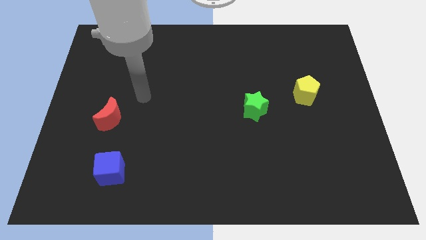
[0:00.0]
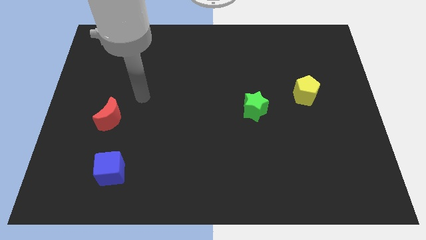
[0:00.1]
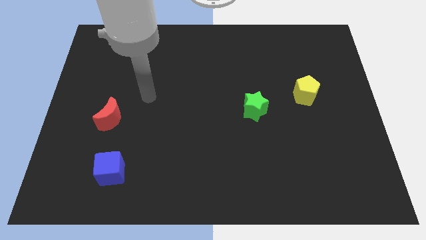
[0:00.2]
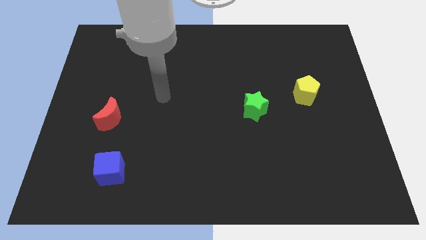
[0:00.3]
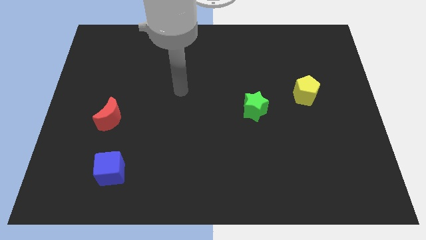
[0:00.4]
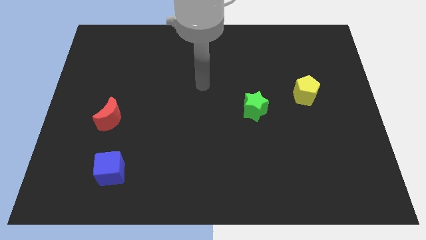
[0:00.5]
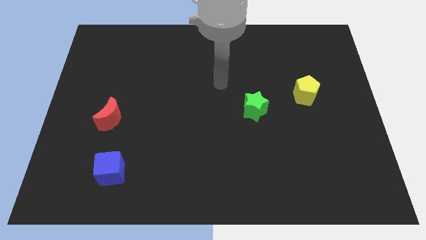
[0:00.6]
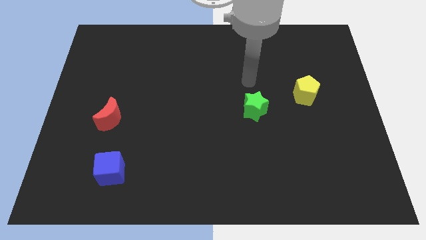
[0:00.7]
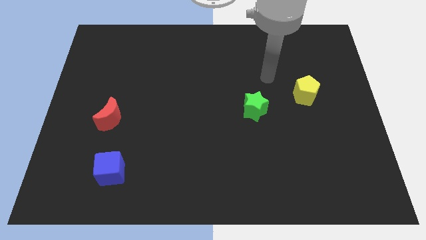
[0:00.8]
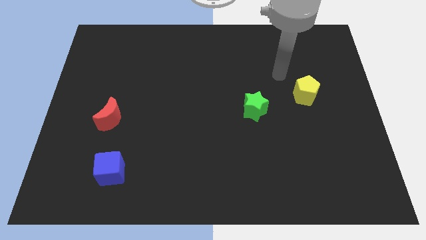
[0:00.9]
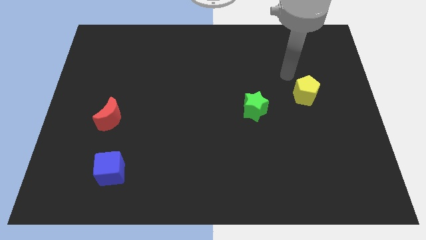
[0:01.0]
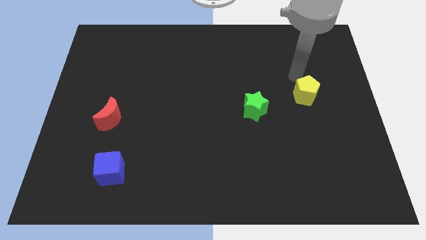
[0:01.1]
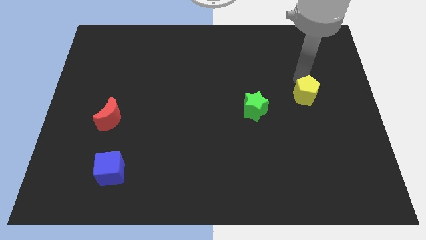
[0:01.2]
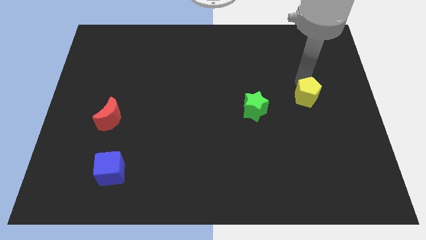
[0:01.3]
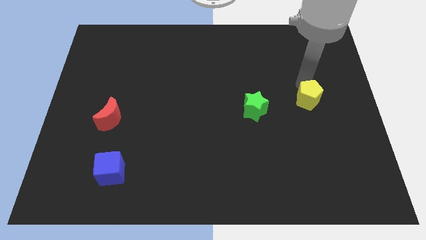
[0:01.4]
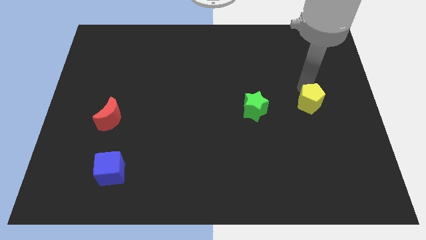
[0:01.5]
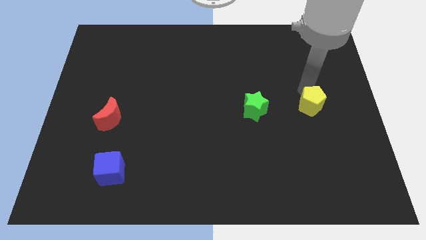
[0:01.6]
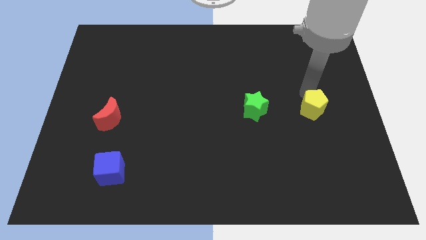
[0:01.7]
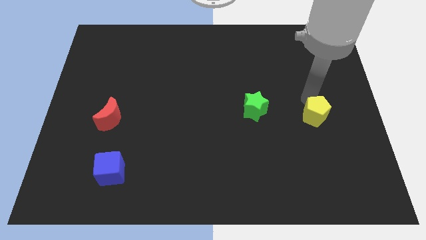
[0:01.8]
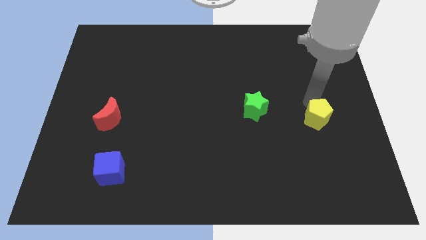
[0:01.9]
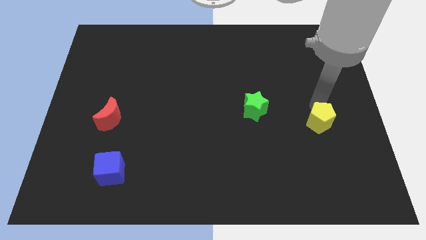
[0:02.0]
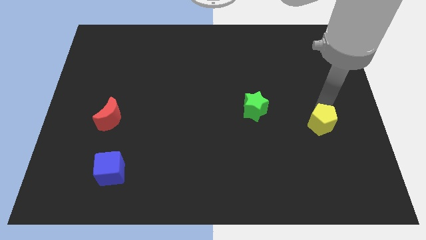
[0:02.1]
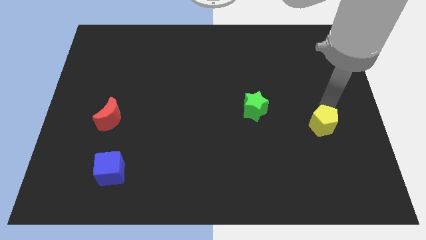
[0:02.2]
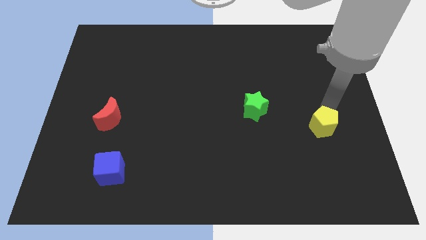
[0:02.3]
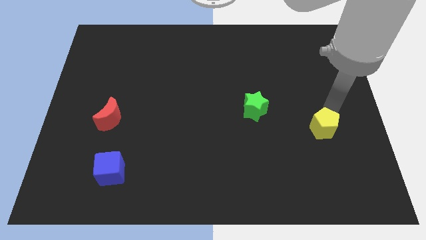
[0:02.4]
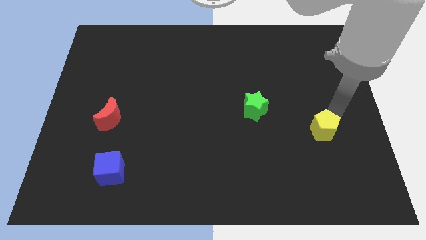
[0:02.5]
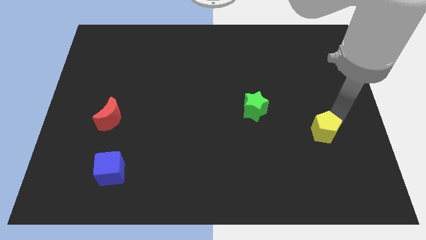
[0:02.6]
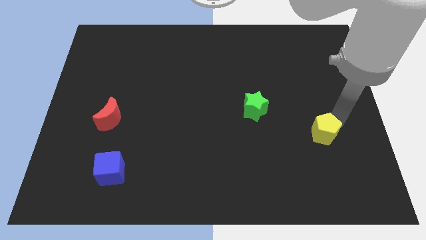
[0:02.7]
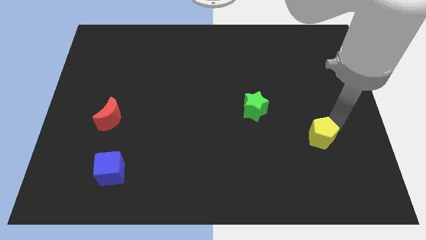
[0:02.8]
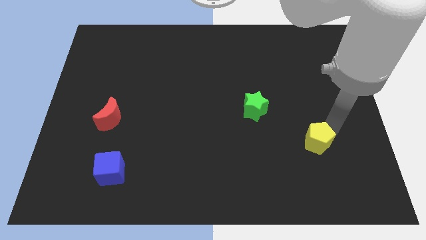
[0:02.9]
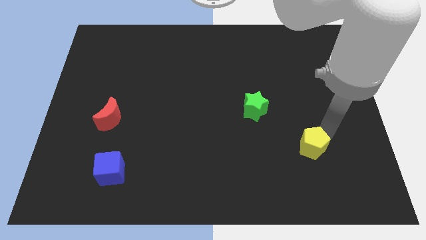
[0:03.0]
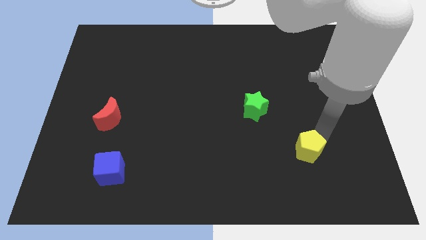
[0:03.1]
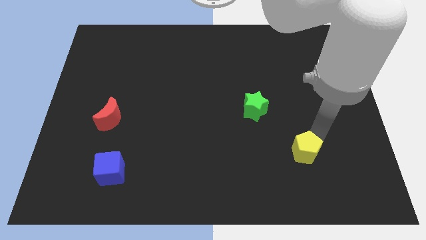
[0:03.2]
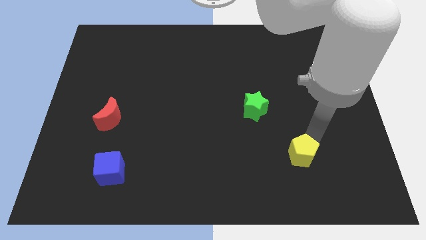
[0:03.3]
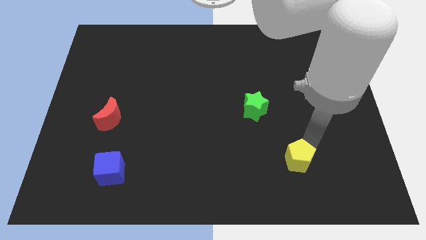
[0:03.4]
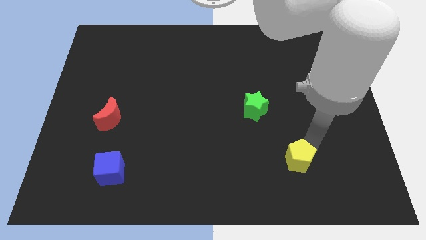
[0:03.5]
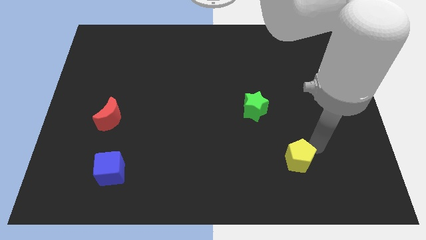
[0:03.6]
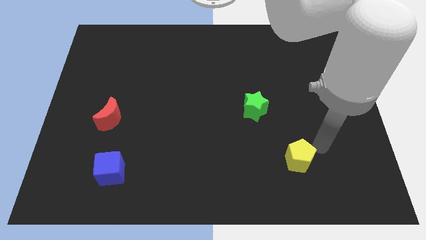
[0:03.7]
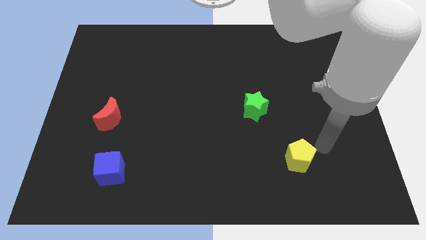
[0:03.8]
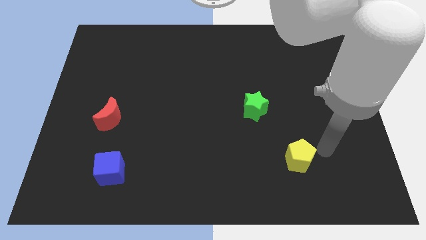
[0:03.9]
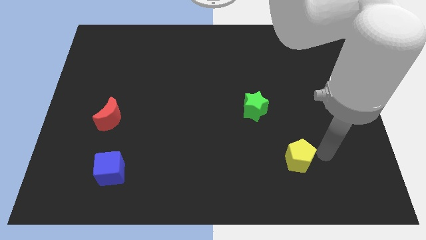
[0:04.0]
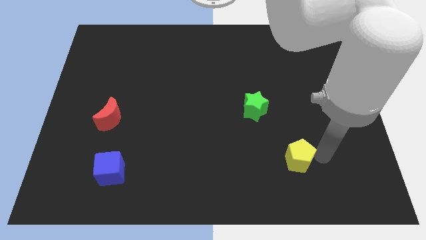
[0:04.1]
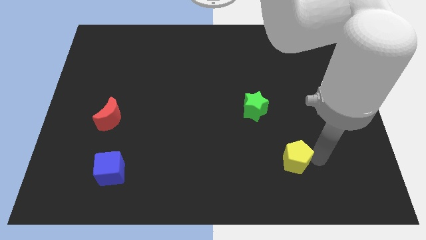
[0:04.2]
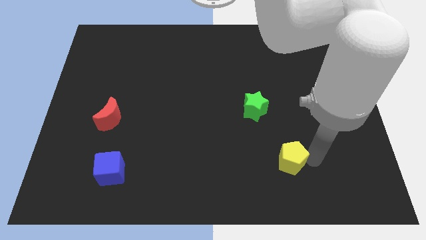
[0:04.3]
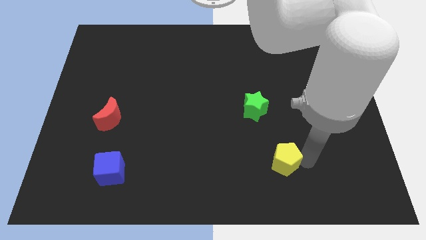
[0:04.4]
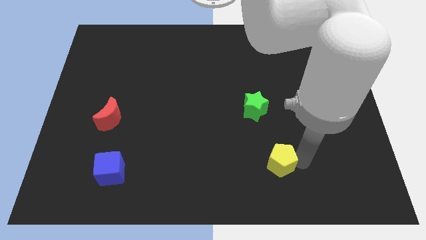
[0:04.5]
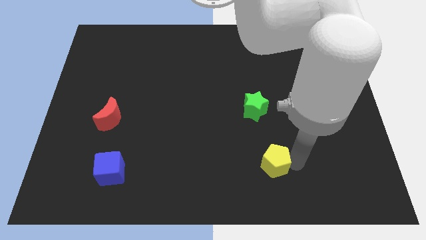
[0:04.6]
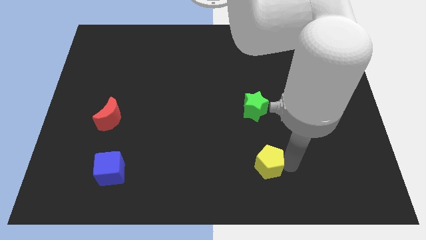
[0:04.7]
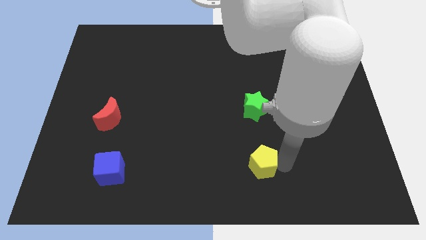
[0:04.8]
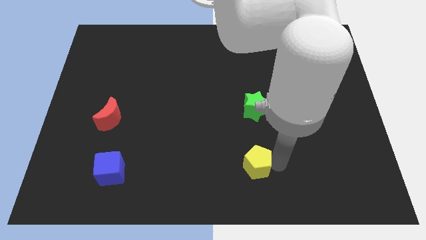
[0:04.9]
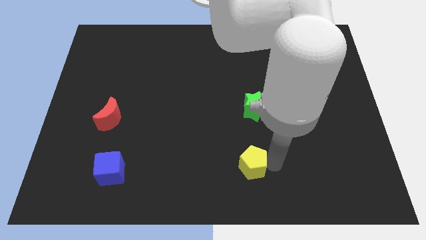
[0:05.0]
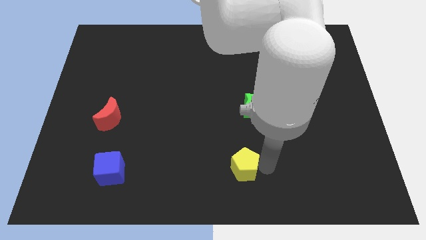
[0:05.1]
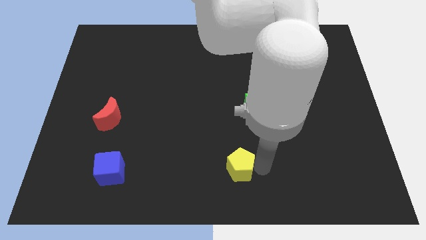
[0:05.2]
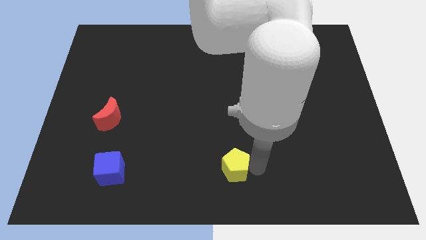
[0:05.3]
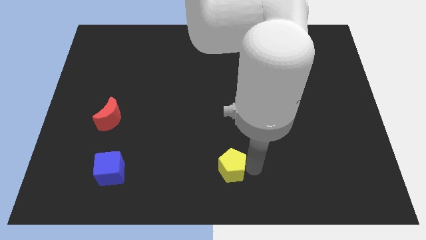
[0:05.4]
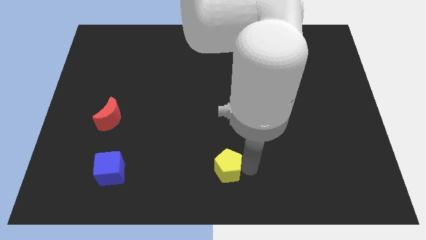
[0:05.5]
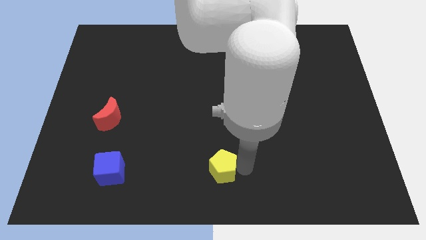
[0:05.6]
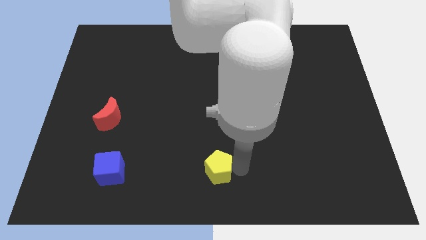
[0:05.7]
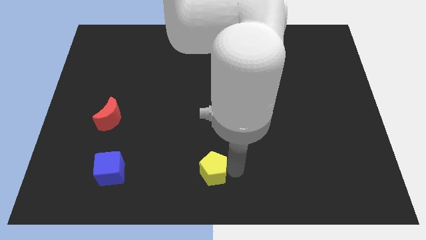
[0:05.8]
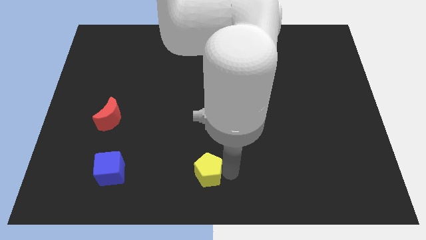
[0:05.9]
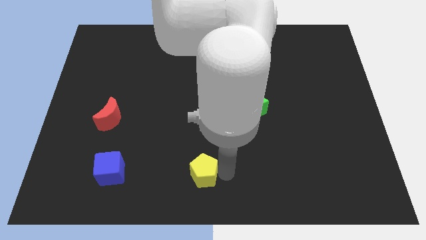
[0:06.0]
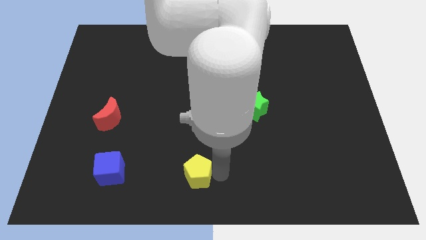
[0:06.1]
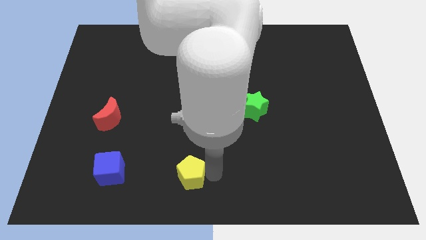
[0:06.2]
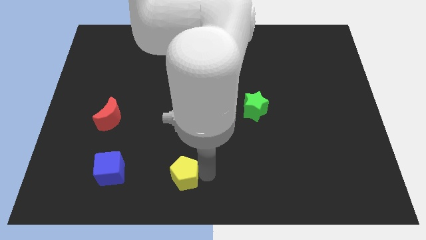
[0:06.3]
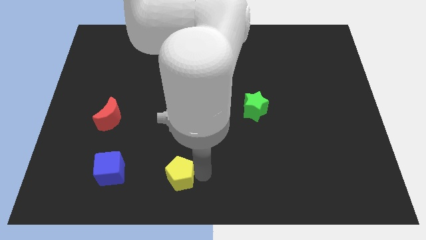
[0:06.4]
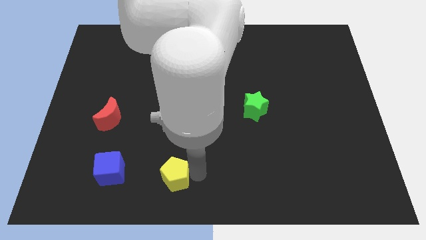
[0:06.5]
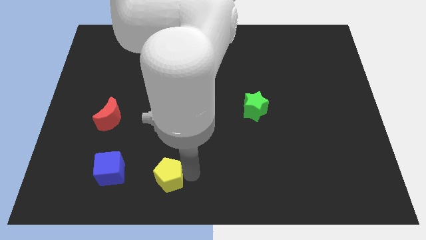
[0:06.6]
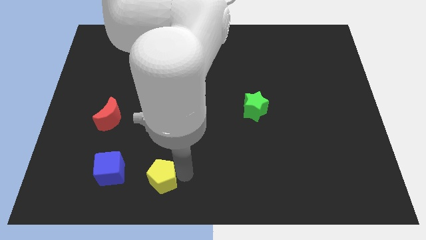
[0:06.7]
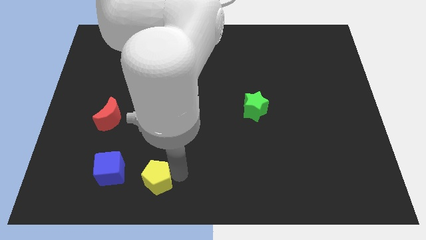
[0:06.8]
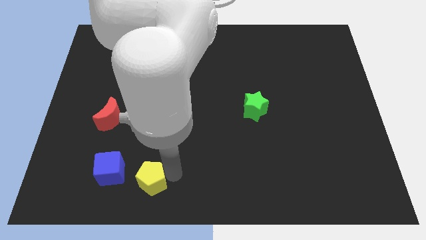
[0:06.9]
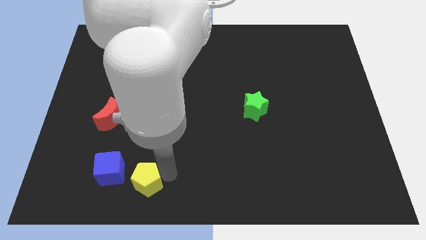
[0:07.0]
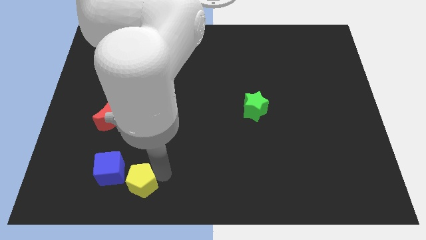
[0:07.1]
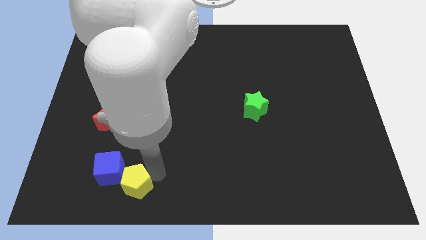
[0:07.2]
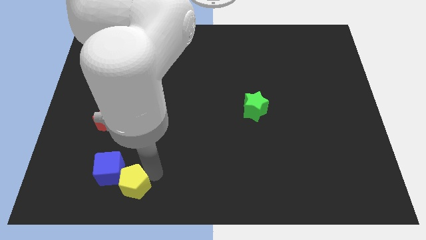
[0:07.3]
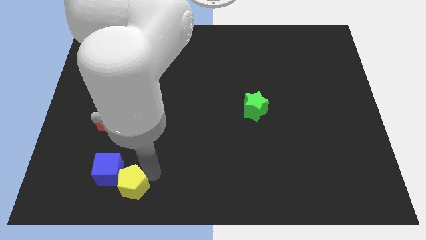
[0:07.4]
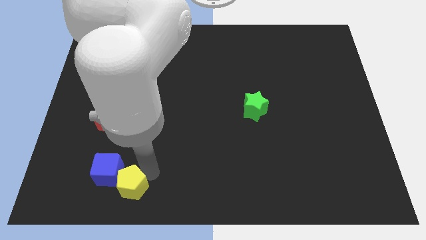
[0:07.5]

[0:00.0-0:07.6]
slide the yellow block to the blue cube

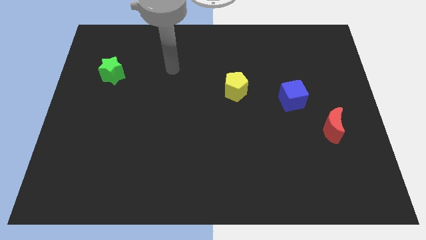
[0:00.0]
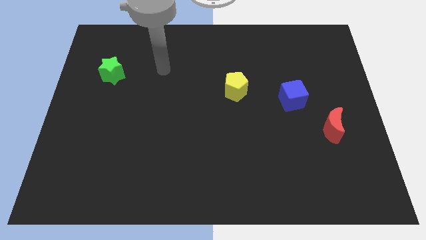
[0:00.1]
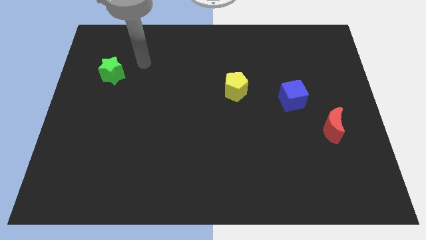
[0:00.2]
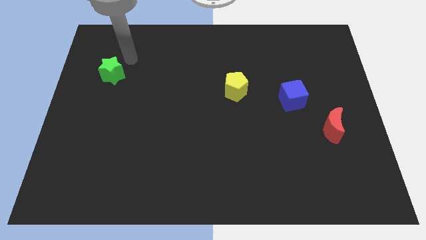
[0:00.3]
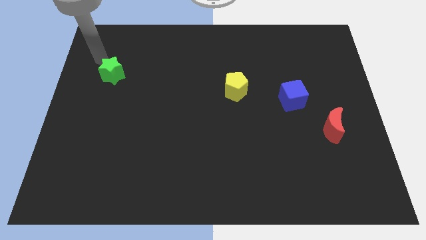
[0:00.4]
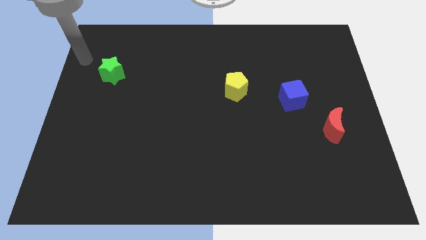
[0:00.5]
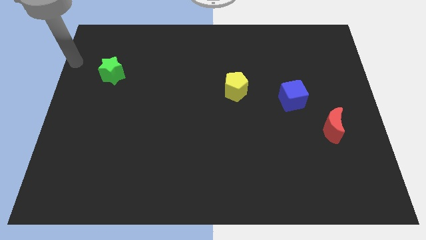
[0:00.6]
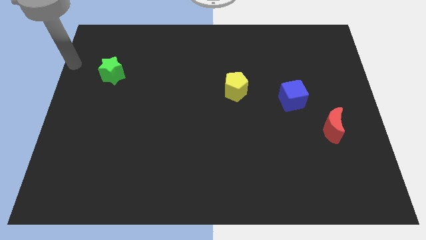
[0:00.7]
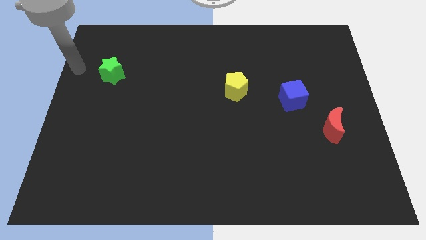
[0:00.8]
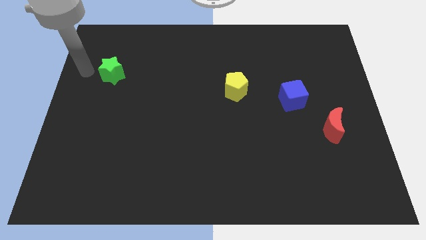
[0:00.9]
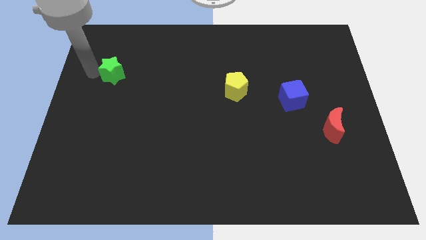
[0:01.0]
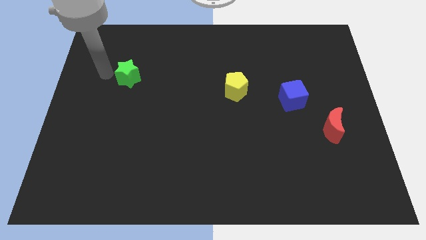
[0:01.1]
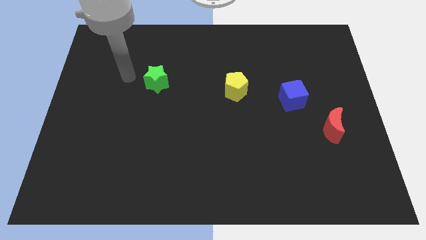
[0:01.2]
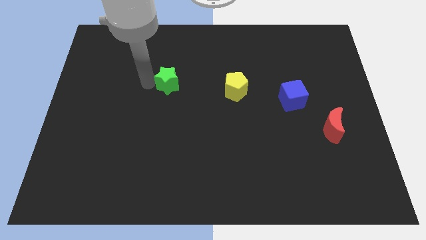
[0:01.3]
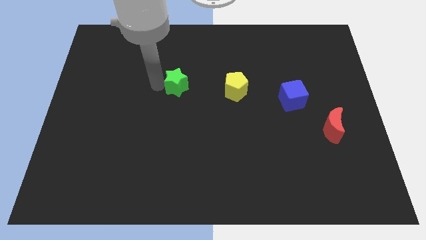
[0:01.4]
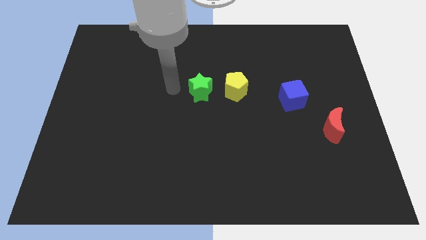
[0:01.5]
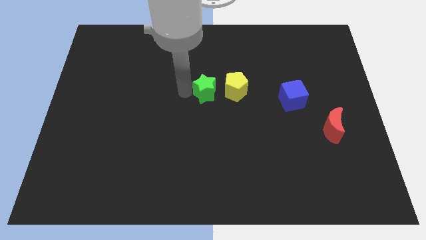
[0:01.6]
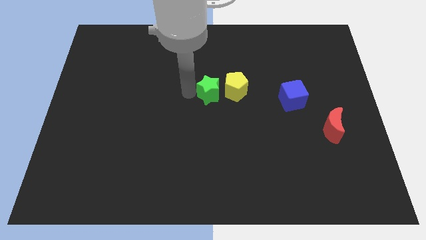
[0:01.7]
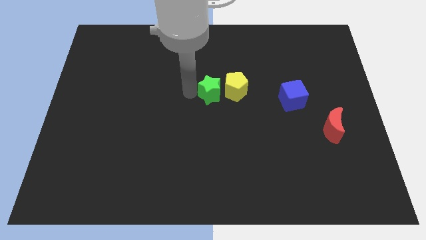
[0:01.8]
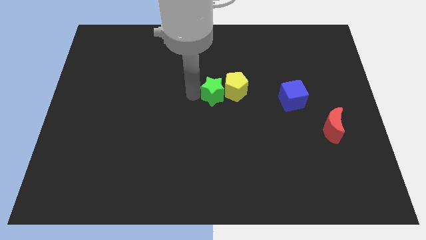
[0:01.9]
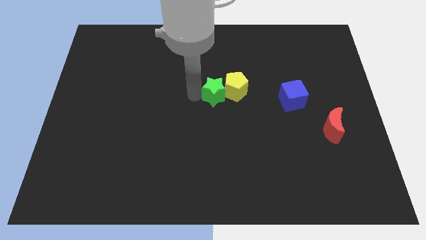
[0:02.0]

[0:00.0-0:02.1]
slide the green block towards the yellow pentagon
